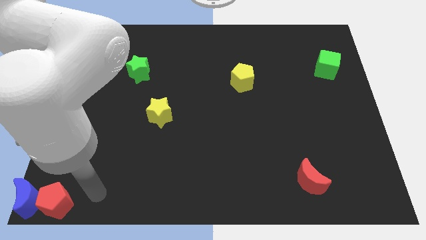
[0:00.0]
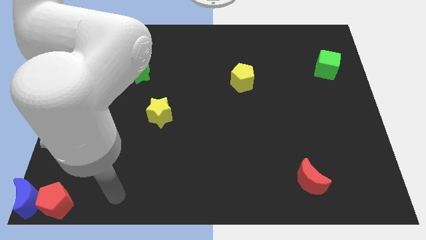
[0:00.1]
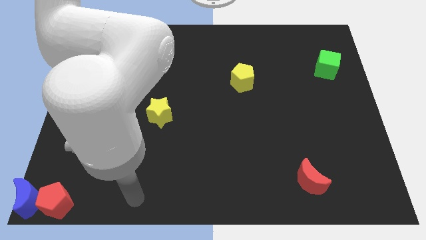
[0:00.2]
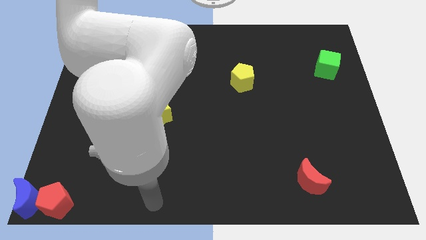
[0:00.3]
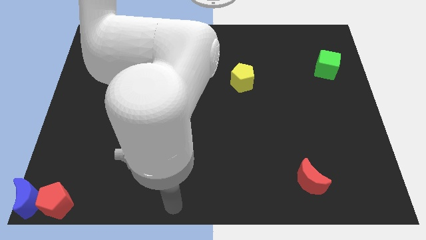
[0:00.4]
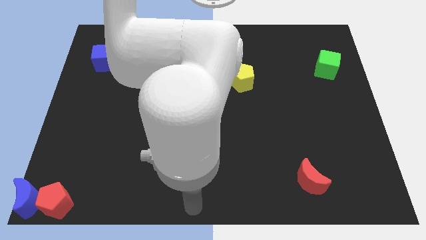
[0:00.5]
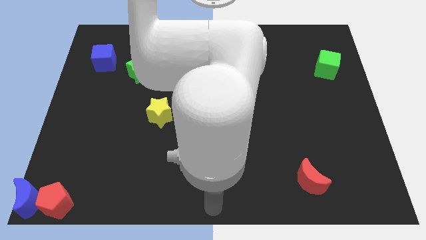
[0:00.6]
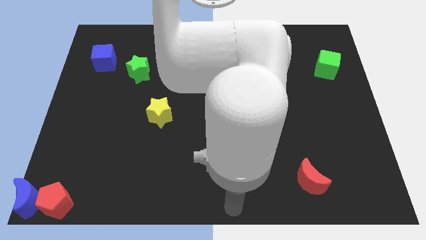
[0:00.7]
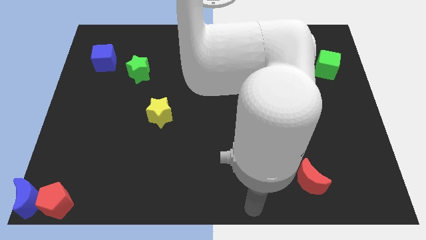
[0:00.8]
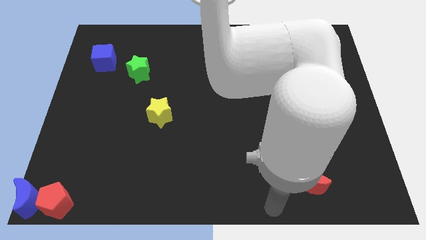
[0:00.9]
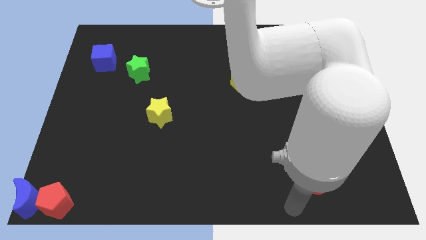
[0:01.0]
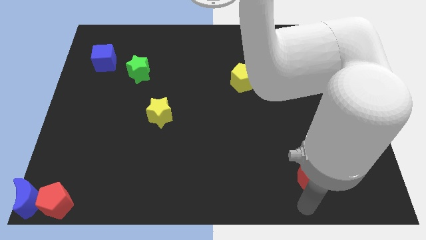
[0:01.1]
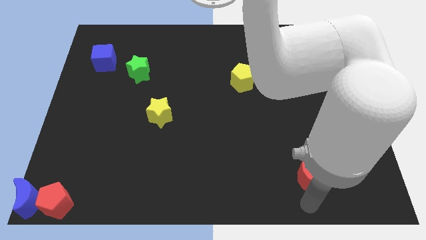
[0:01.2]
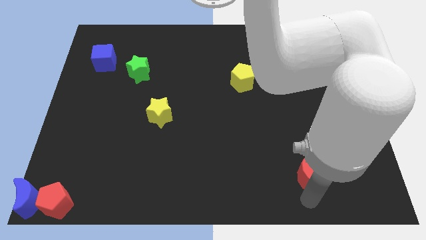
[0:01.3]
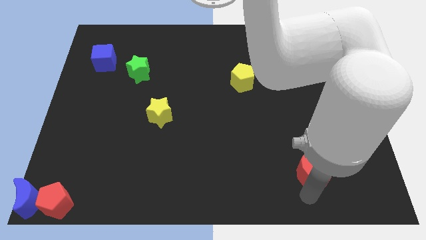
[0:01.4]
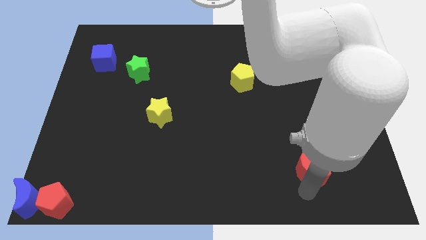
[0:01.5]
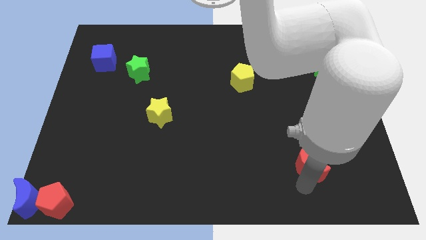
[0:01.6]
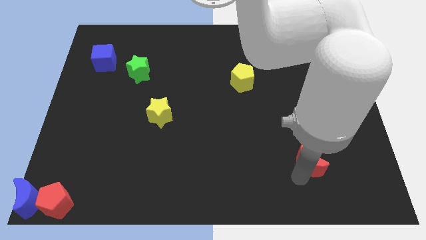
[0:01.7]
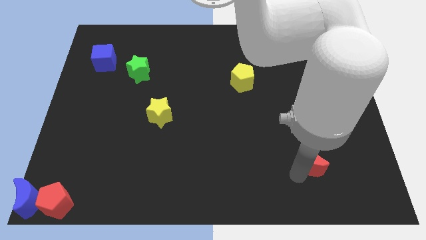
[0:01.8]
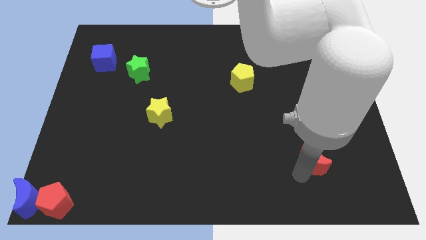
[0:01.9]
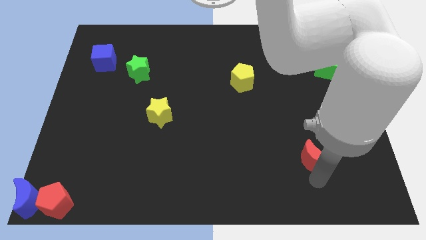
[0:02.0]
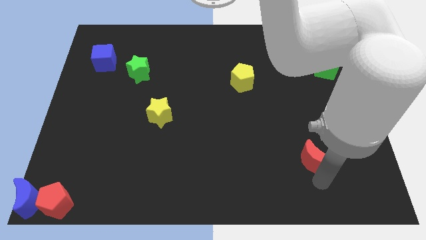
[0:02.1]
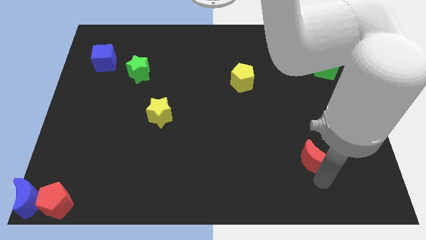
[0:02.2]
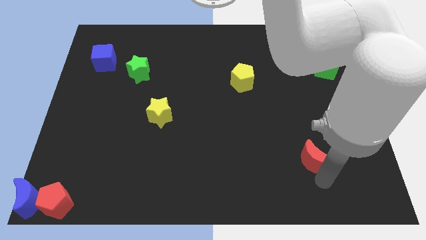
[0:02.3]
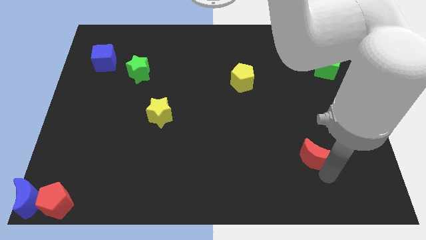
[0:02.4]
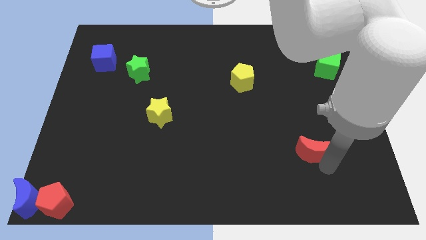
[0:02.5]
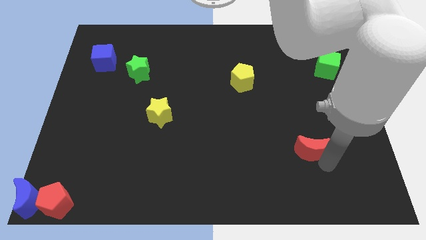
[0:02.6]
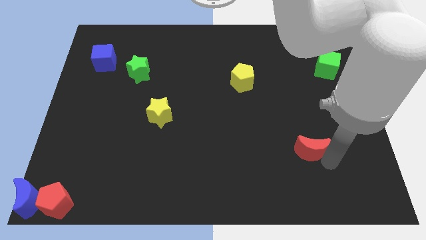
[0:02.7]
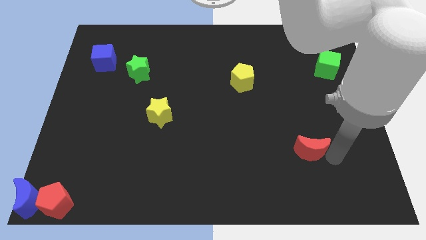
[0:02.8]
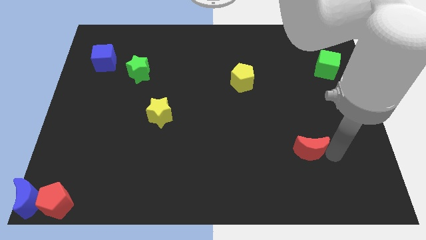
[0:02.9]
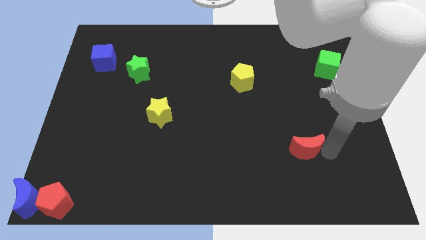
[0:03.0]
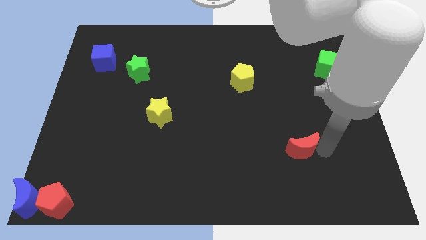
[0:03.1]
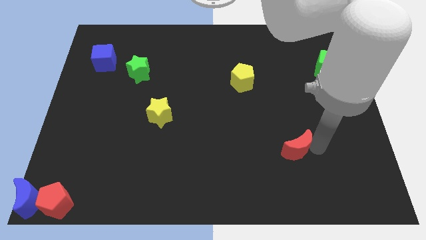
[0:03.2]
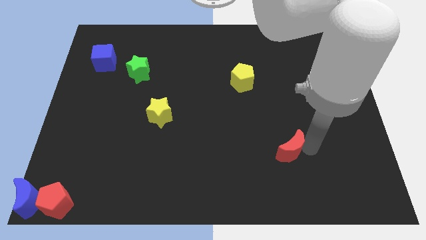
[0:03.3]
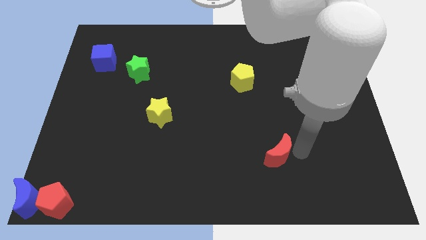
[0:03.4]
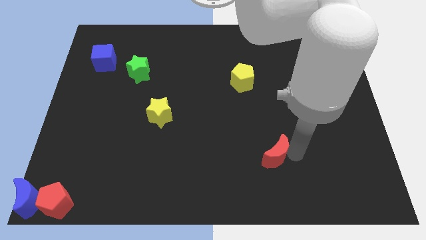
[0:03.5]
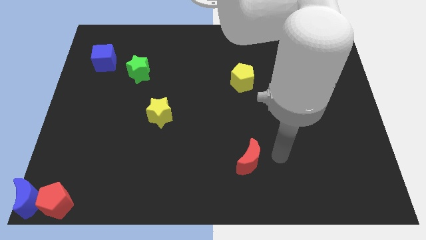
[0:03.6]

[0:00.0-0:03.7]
place the red moon below the yellow pentagon

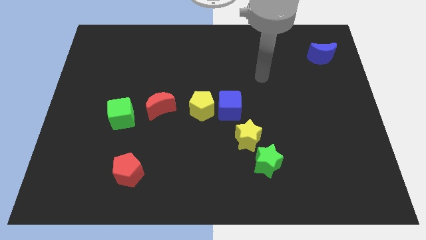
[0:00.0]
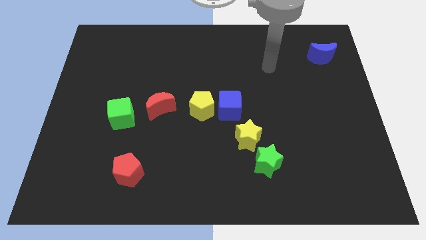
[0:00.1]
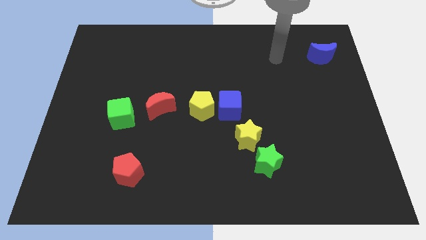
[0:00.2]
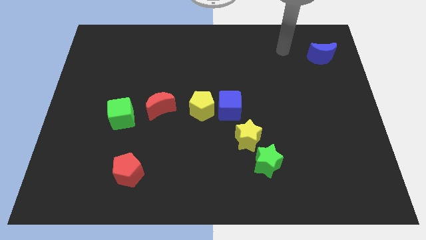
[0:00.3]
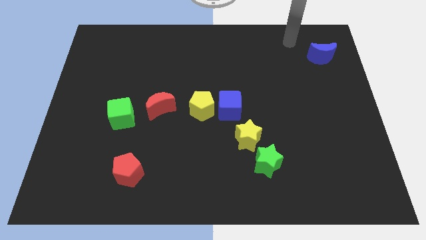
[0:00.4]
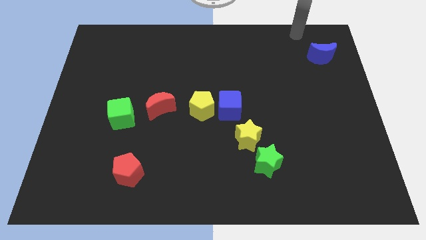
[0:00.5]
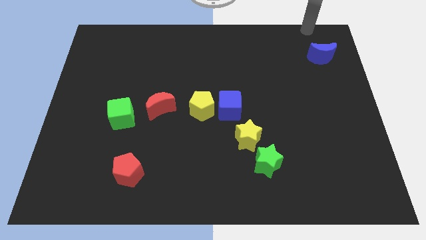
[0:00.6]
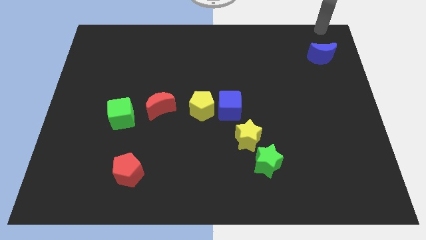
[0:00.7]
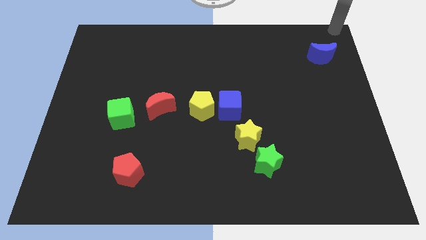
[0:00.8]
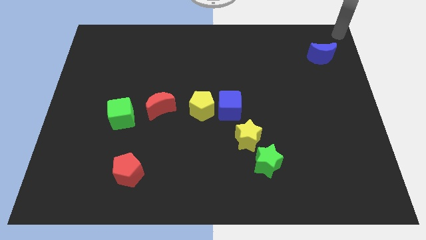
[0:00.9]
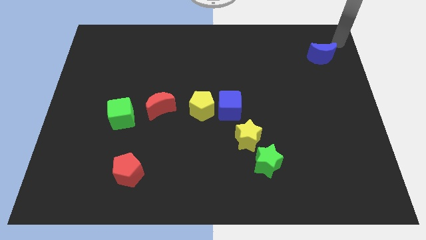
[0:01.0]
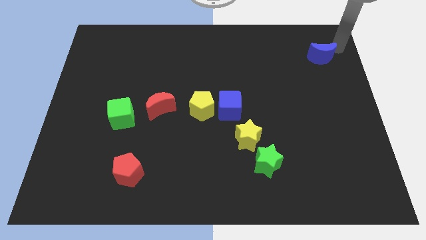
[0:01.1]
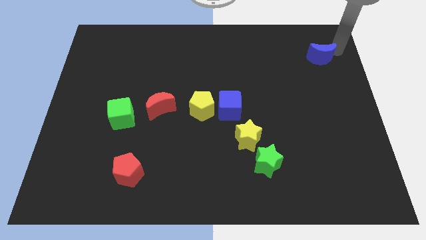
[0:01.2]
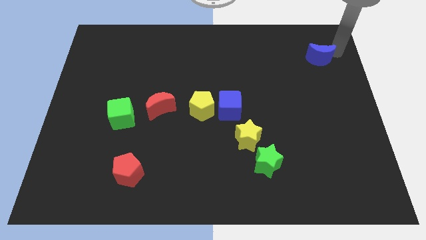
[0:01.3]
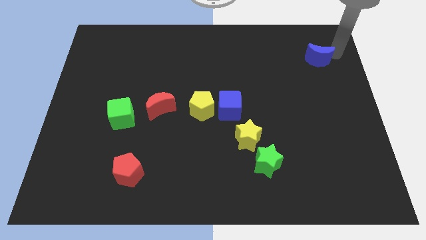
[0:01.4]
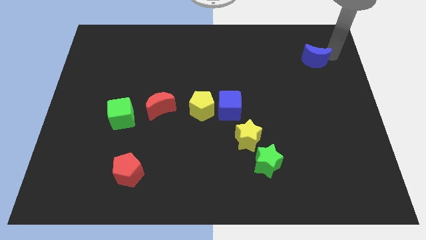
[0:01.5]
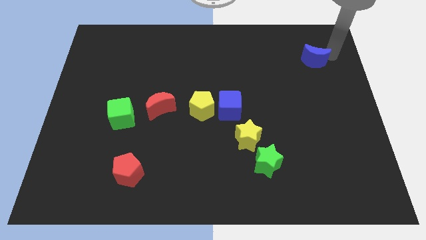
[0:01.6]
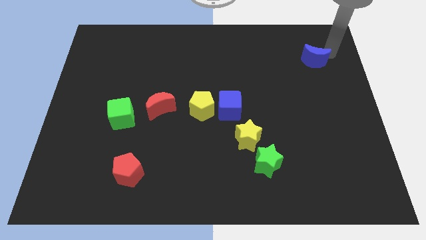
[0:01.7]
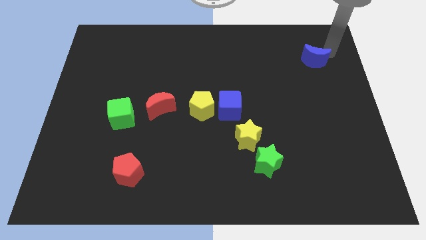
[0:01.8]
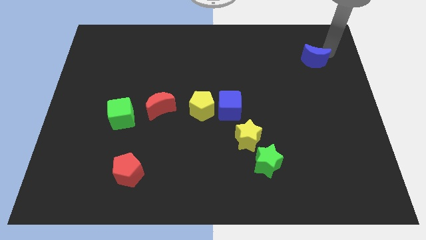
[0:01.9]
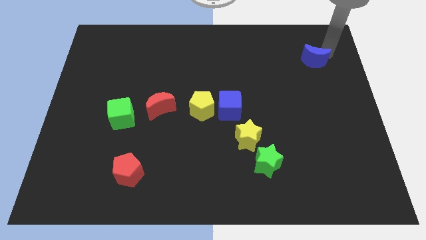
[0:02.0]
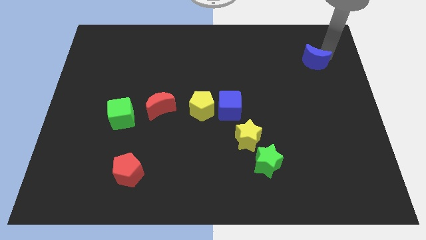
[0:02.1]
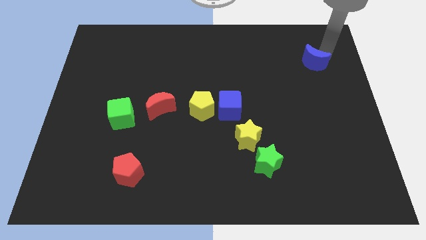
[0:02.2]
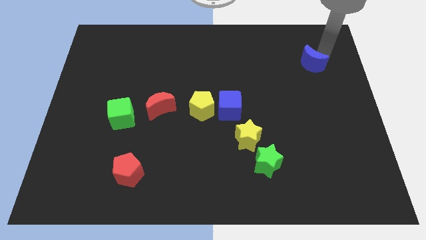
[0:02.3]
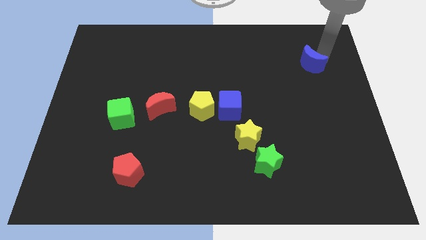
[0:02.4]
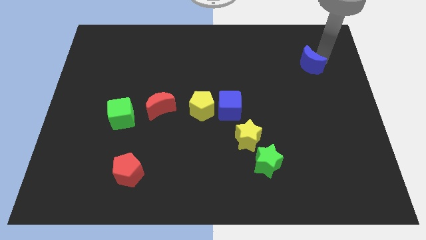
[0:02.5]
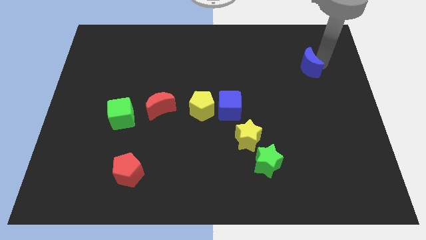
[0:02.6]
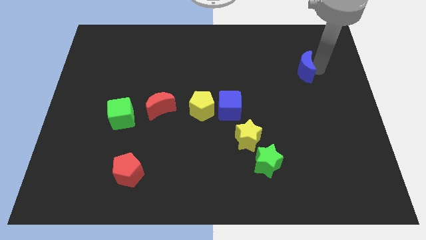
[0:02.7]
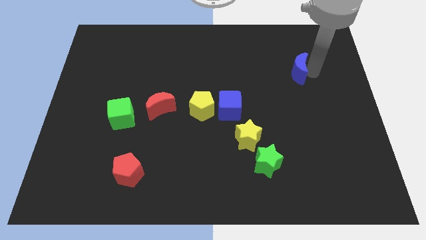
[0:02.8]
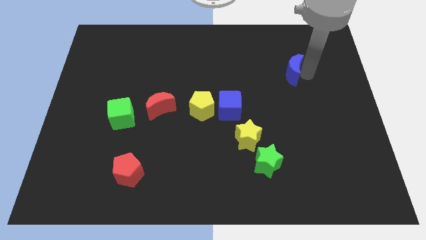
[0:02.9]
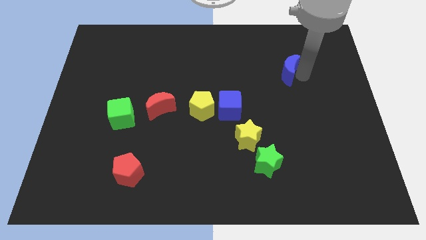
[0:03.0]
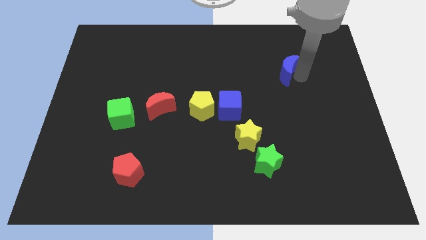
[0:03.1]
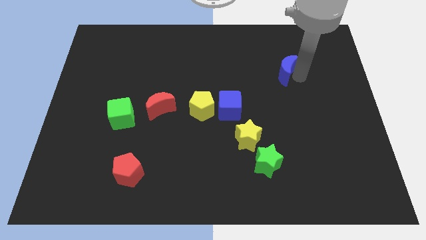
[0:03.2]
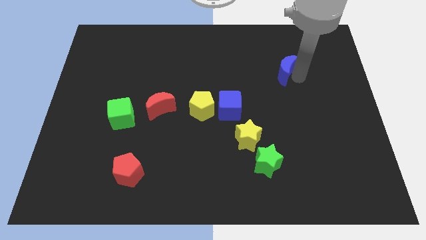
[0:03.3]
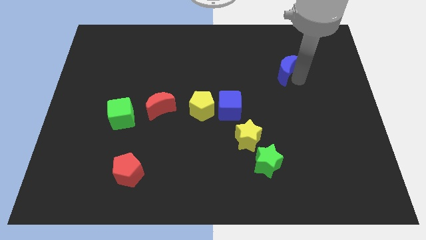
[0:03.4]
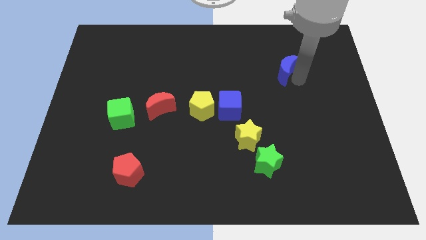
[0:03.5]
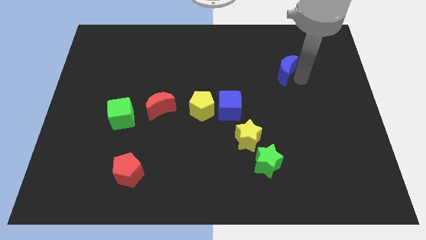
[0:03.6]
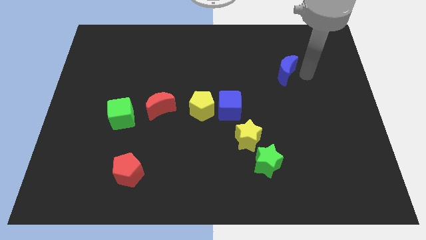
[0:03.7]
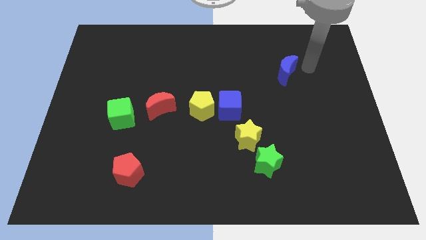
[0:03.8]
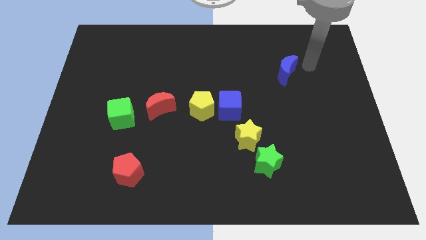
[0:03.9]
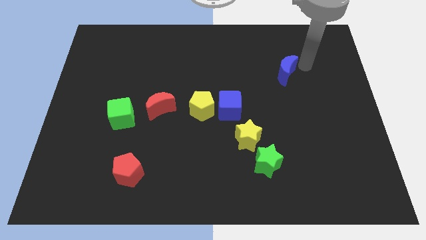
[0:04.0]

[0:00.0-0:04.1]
push the blue crescent to the top right of the blue cube

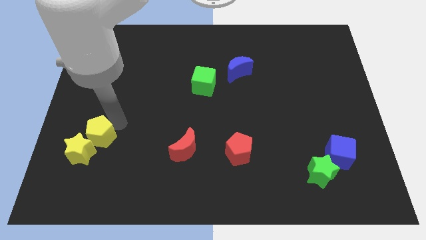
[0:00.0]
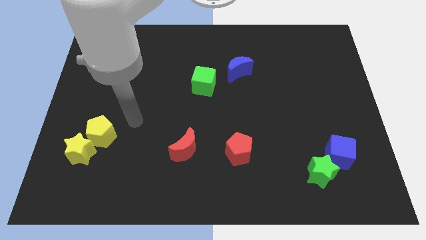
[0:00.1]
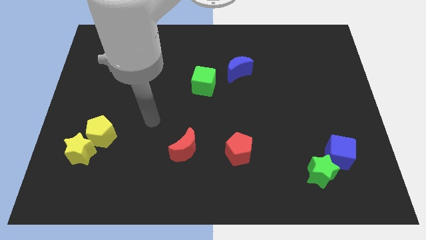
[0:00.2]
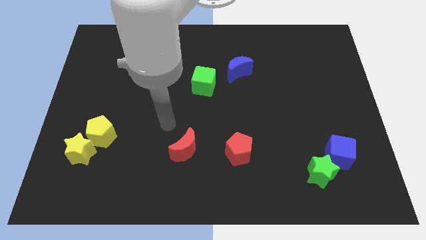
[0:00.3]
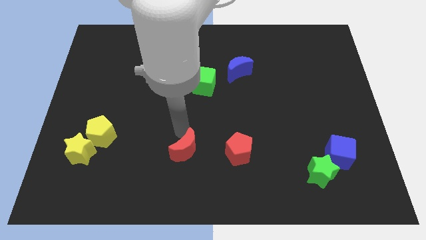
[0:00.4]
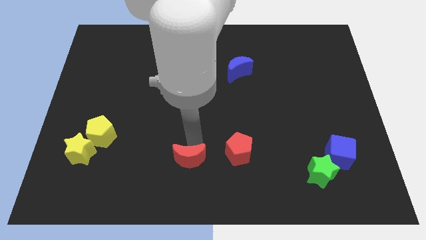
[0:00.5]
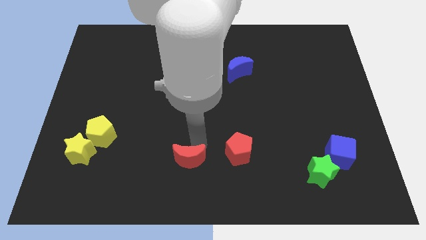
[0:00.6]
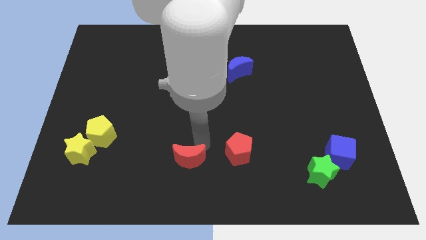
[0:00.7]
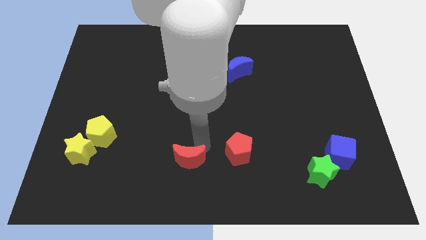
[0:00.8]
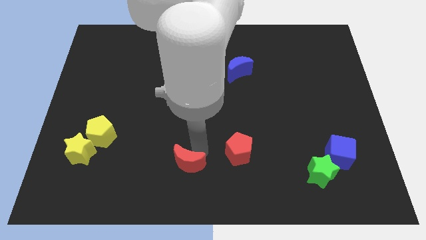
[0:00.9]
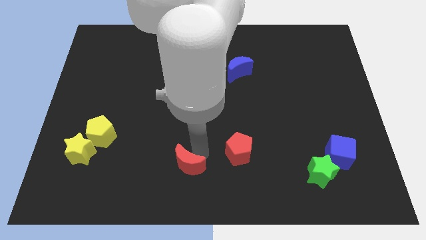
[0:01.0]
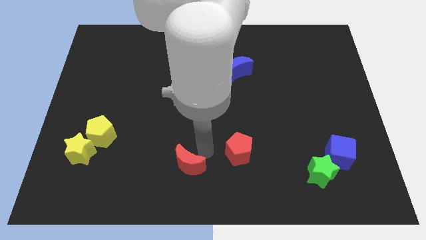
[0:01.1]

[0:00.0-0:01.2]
move the red moon slightly down

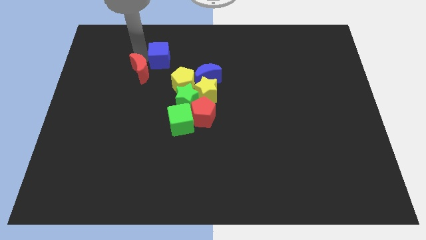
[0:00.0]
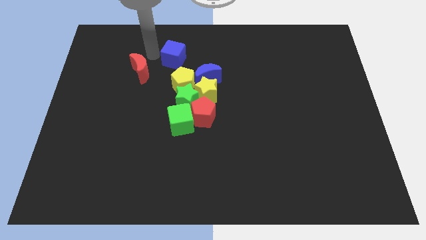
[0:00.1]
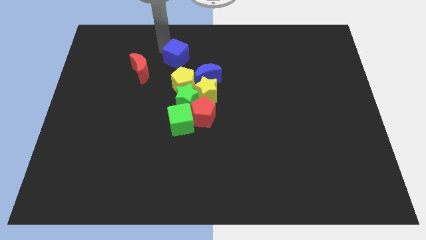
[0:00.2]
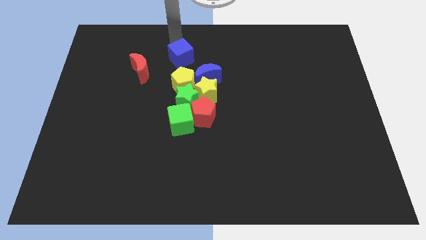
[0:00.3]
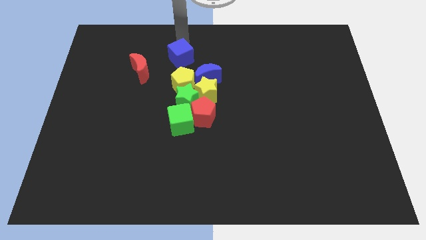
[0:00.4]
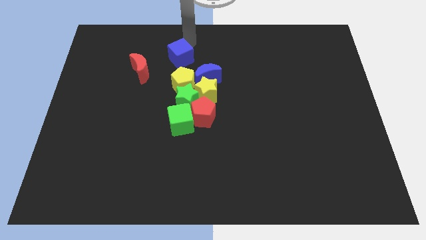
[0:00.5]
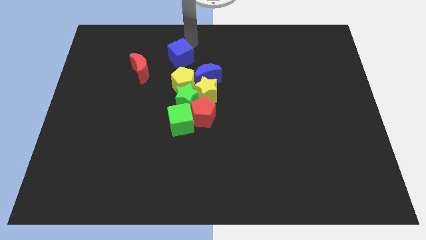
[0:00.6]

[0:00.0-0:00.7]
separate the blue cube from the red moon
